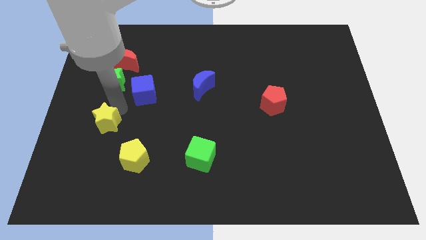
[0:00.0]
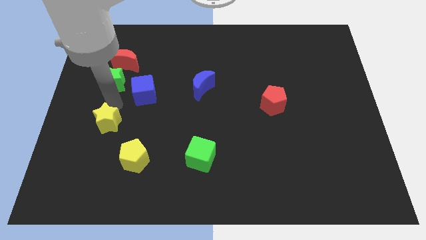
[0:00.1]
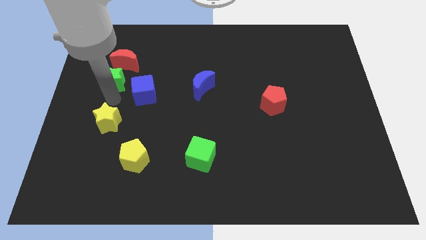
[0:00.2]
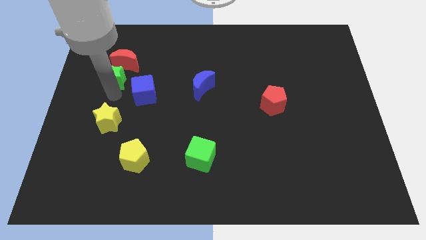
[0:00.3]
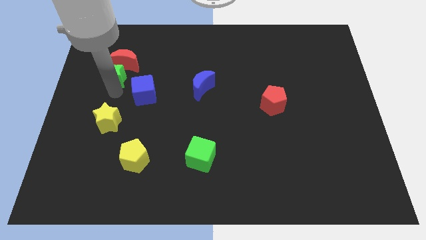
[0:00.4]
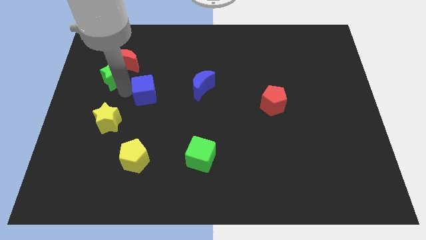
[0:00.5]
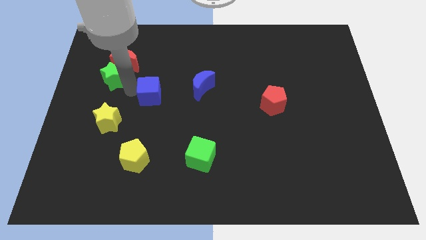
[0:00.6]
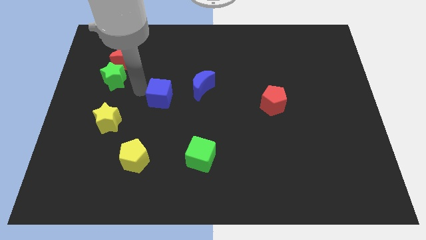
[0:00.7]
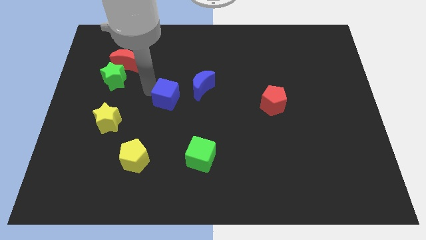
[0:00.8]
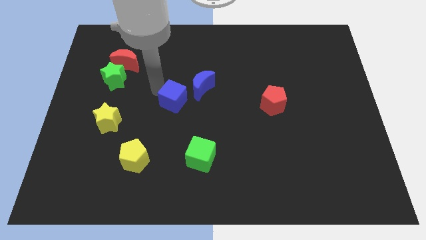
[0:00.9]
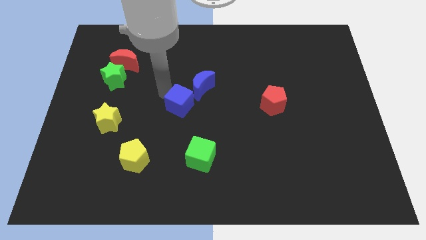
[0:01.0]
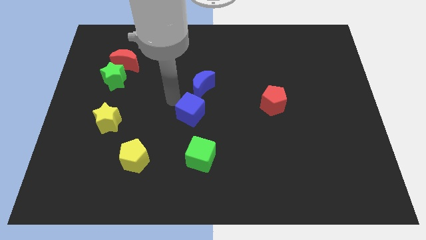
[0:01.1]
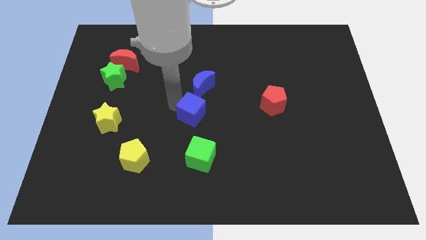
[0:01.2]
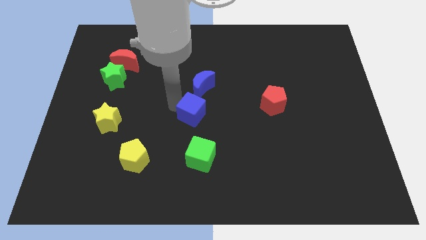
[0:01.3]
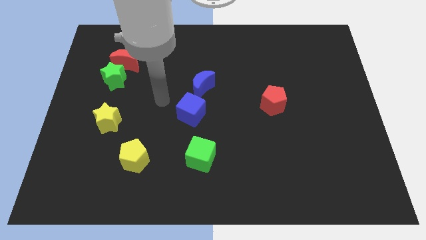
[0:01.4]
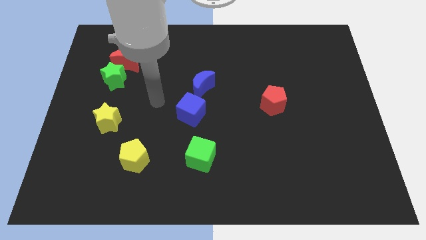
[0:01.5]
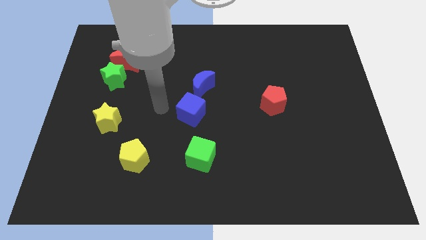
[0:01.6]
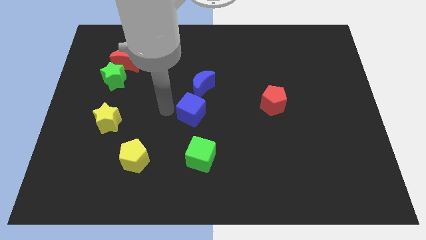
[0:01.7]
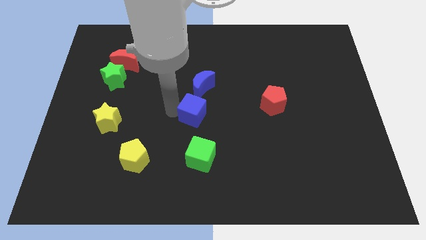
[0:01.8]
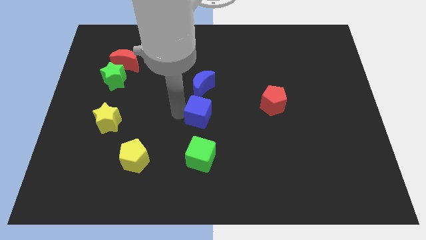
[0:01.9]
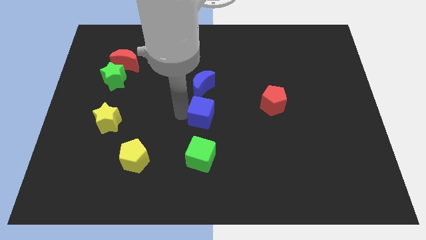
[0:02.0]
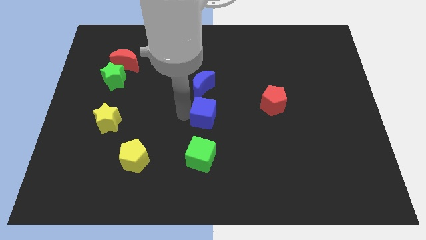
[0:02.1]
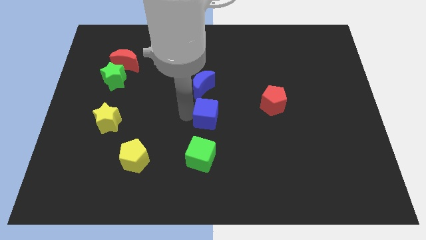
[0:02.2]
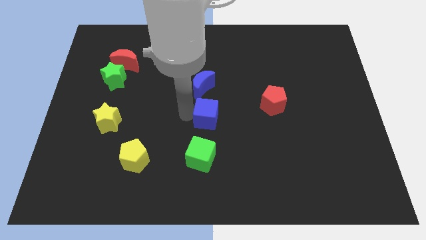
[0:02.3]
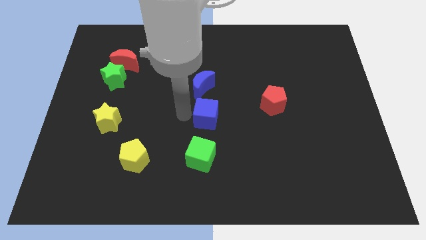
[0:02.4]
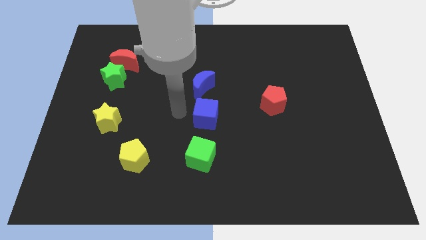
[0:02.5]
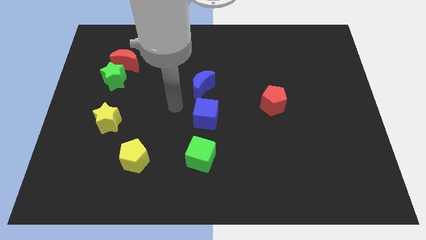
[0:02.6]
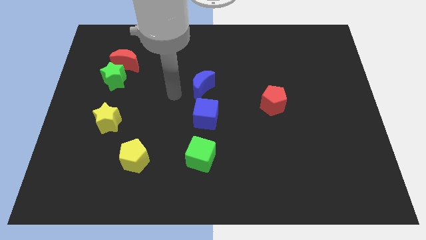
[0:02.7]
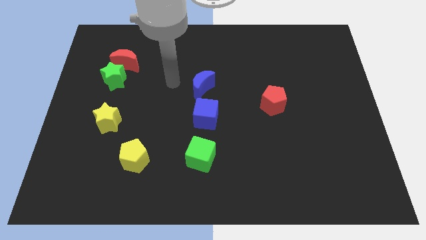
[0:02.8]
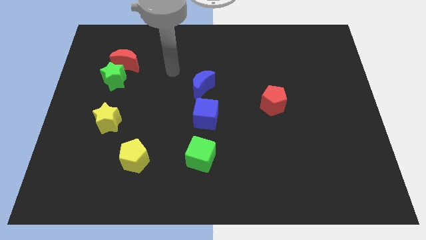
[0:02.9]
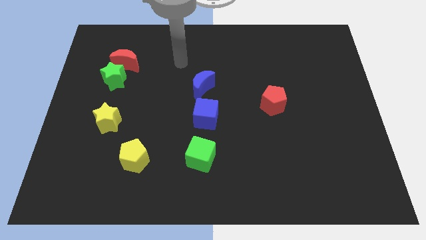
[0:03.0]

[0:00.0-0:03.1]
push the blue cube below the blue moon

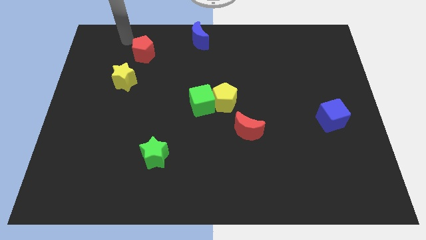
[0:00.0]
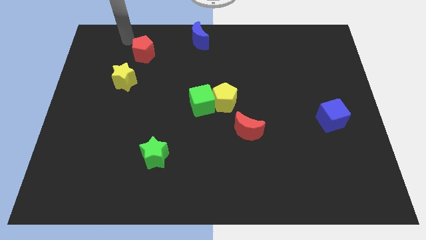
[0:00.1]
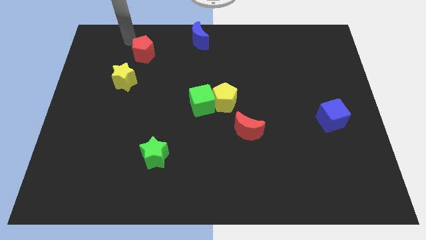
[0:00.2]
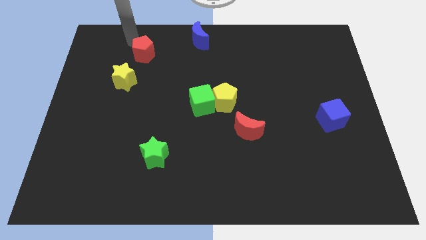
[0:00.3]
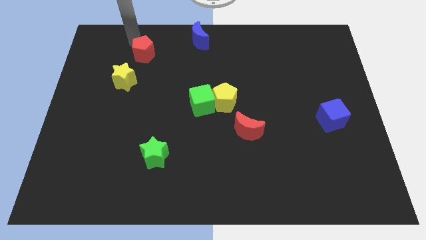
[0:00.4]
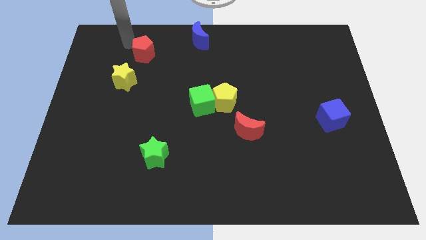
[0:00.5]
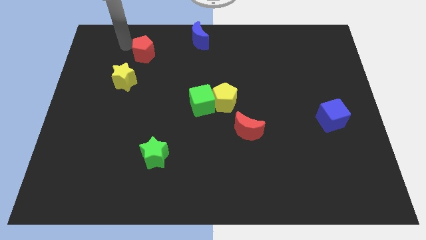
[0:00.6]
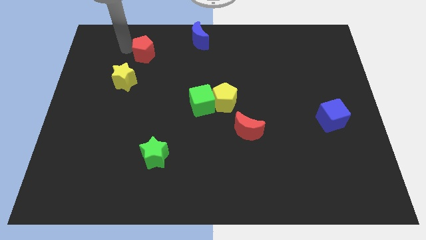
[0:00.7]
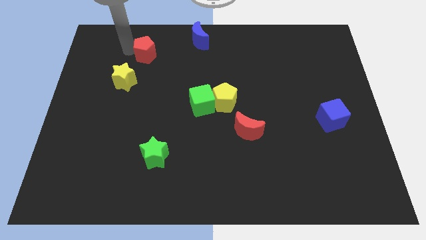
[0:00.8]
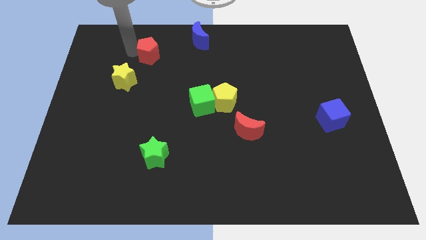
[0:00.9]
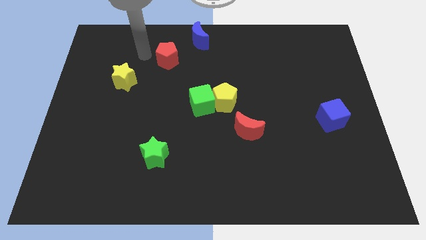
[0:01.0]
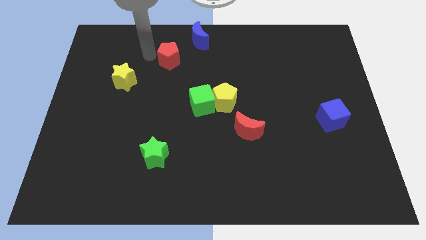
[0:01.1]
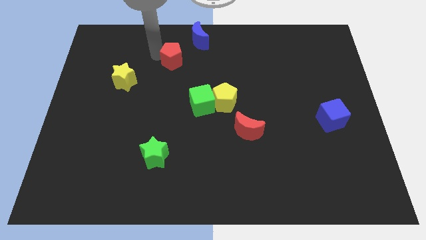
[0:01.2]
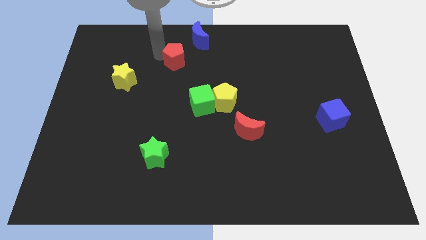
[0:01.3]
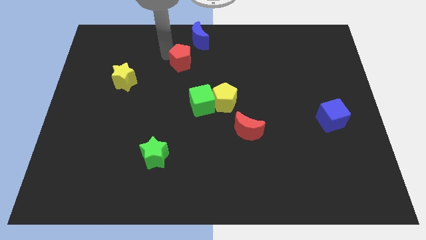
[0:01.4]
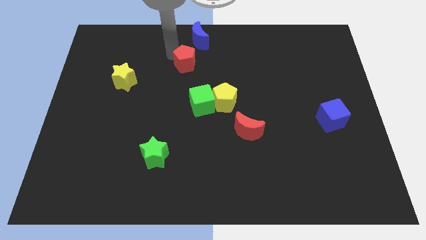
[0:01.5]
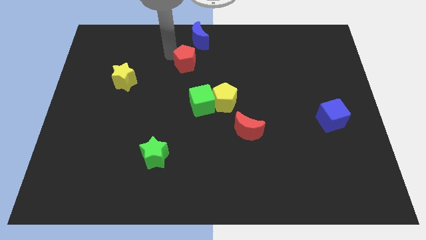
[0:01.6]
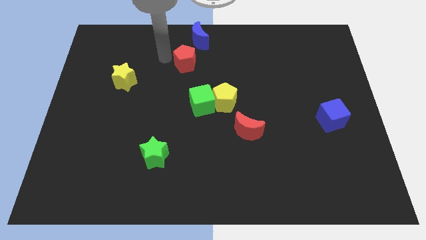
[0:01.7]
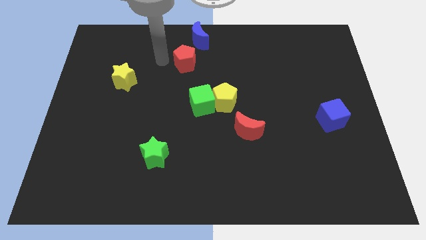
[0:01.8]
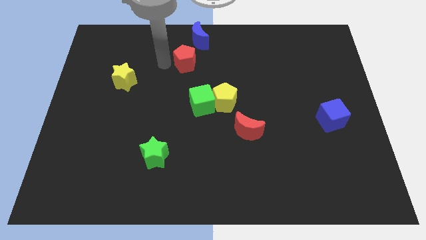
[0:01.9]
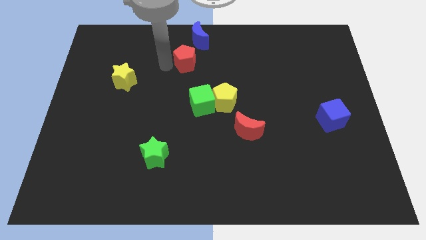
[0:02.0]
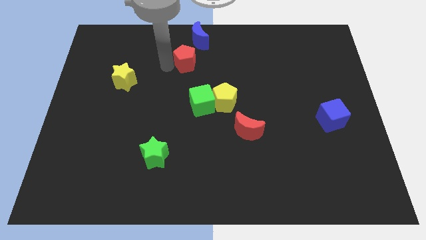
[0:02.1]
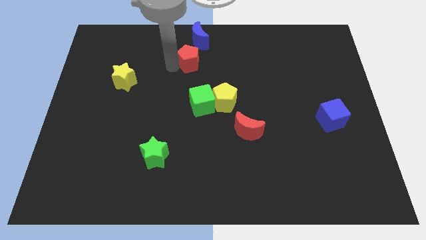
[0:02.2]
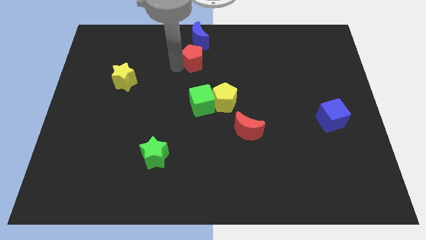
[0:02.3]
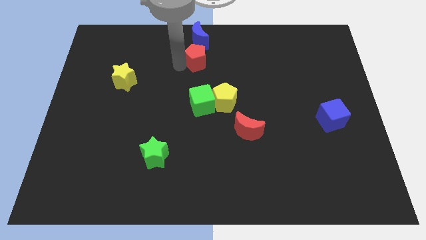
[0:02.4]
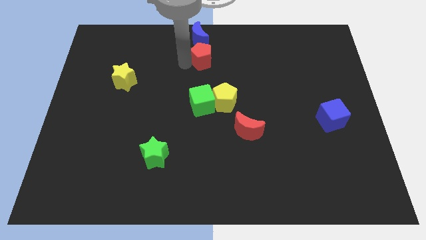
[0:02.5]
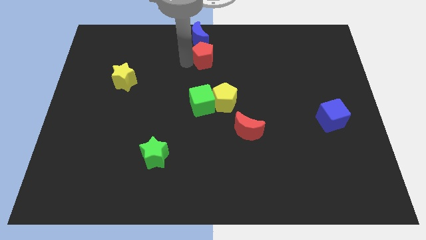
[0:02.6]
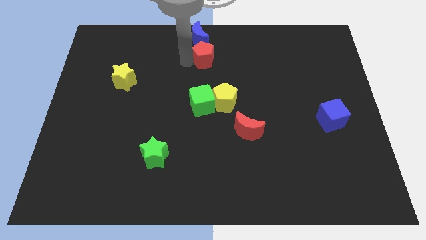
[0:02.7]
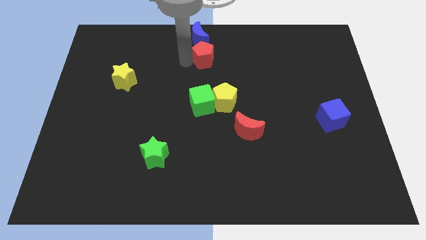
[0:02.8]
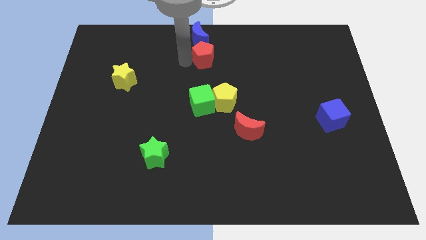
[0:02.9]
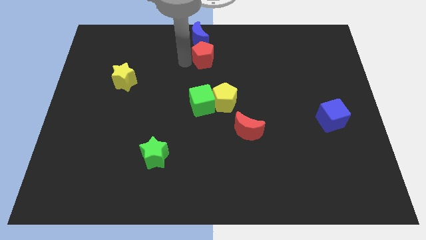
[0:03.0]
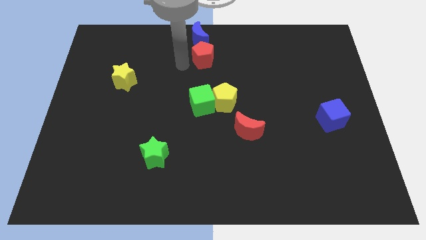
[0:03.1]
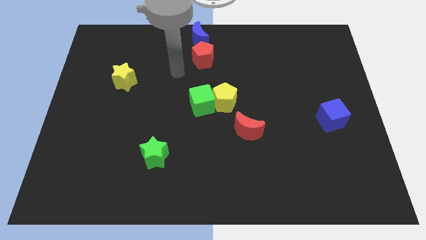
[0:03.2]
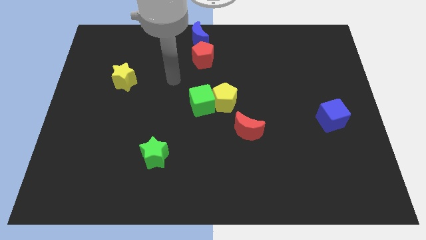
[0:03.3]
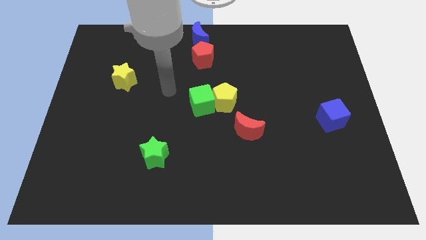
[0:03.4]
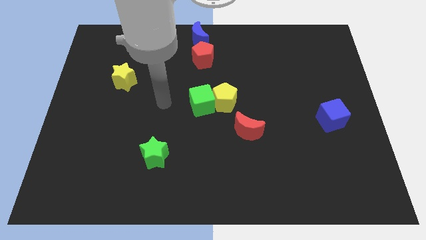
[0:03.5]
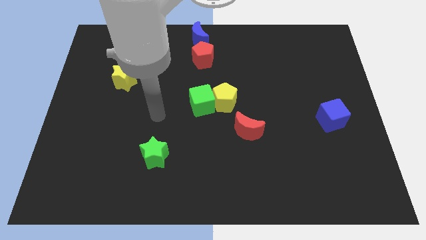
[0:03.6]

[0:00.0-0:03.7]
move the red pentagon to bottom of blue crescent

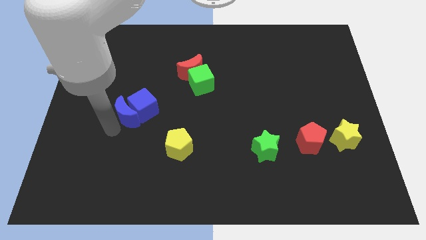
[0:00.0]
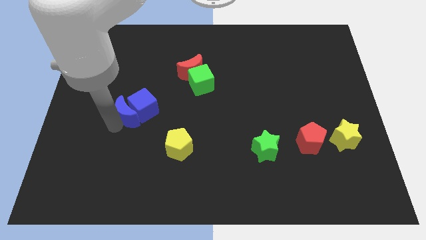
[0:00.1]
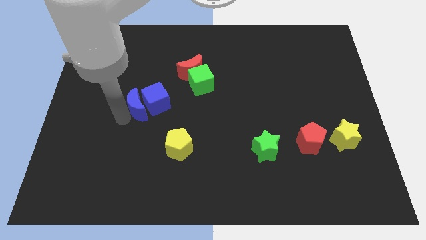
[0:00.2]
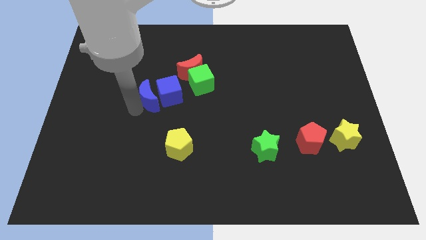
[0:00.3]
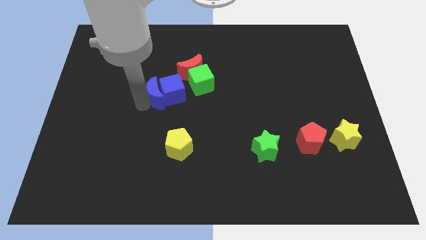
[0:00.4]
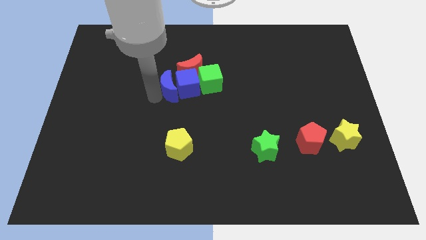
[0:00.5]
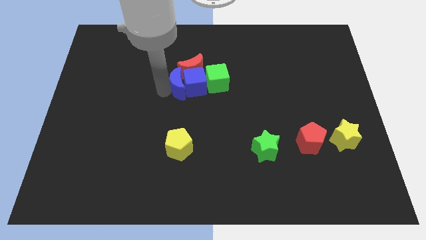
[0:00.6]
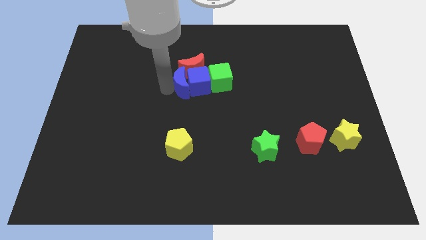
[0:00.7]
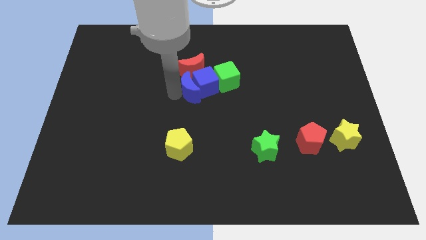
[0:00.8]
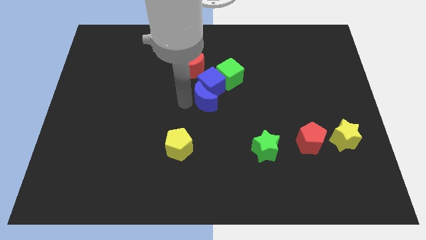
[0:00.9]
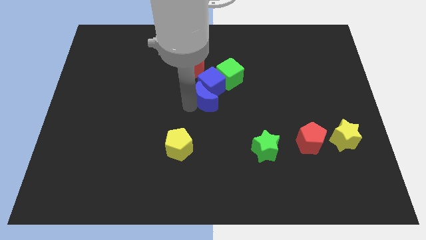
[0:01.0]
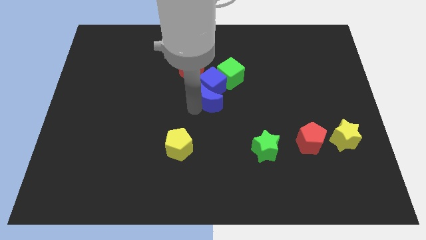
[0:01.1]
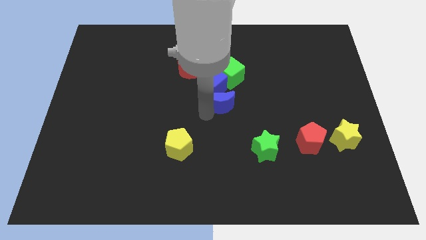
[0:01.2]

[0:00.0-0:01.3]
push the blue blocks to the bottom left of the green cube

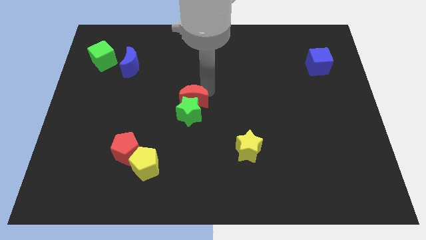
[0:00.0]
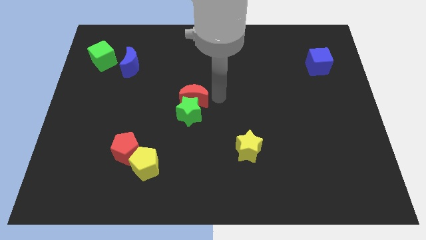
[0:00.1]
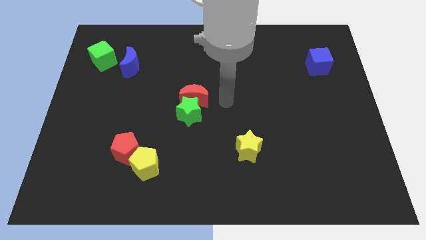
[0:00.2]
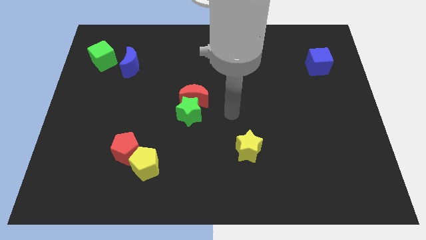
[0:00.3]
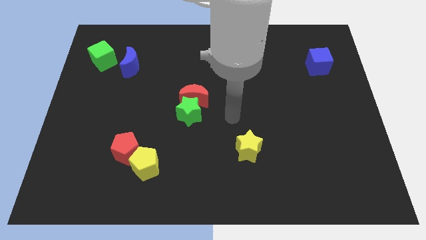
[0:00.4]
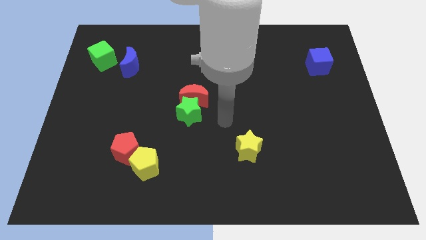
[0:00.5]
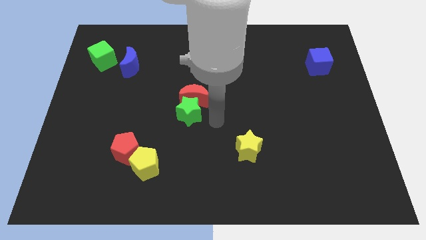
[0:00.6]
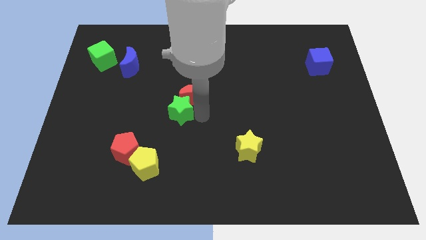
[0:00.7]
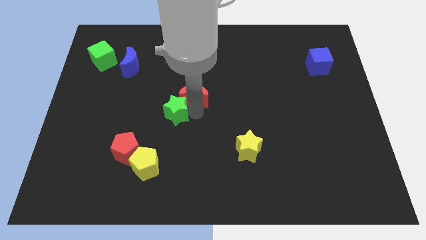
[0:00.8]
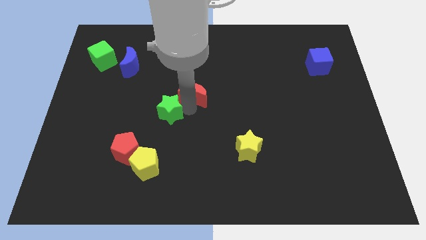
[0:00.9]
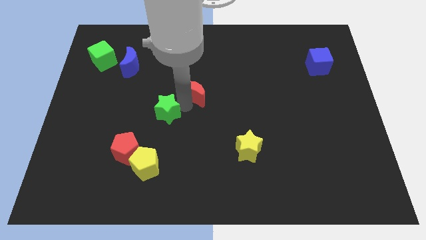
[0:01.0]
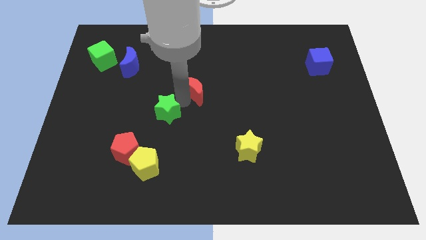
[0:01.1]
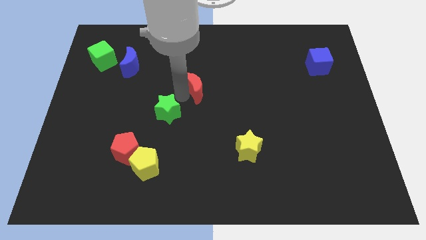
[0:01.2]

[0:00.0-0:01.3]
place your hand in between the red moon and green star
